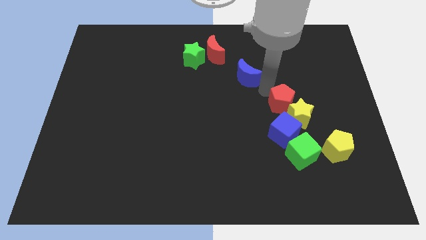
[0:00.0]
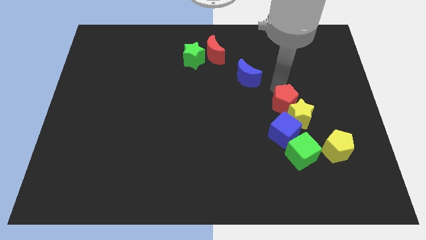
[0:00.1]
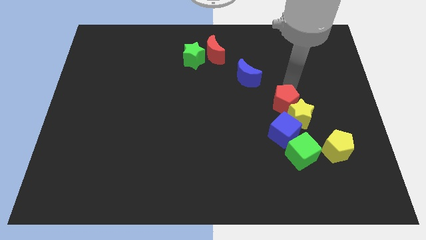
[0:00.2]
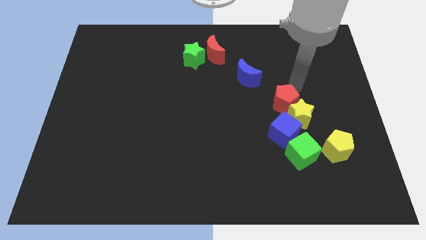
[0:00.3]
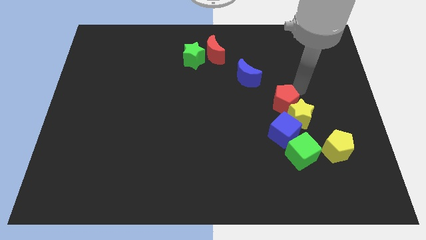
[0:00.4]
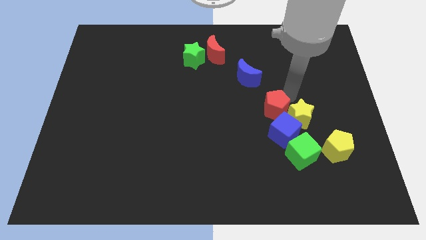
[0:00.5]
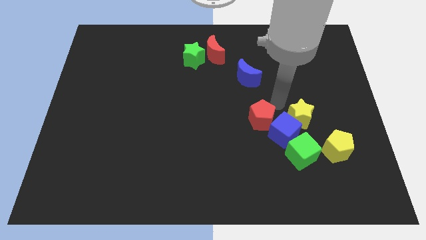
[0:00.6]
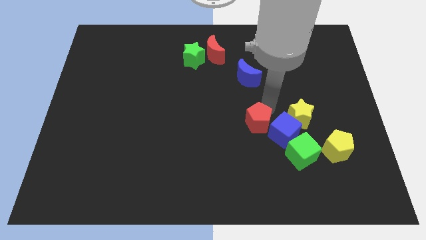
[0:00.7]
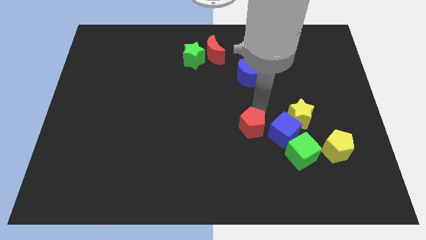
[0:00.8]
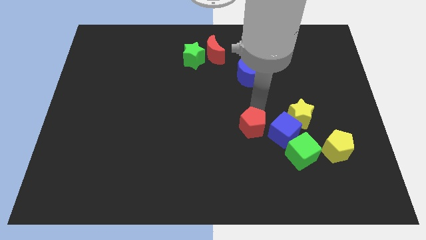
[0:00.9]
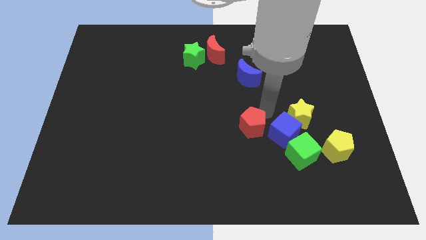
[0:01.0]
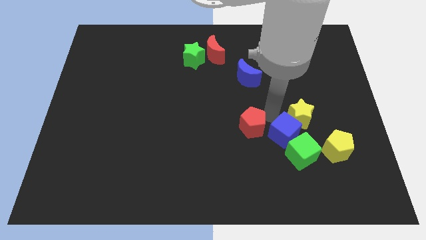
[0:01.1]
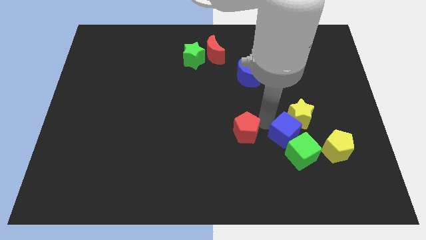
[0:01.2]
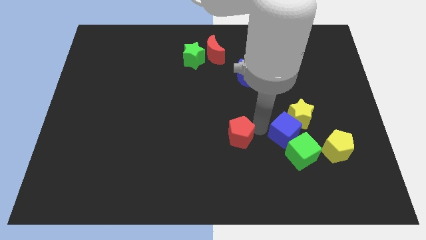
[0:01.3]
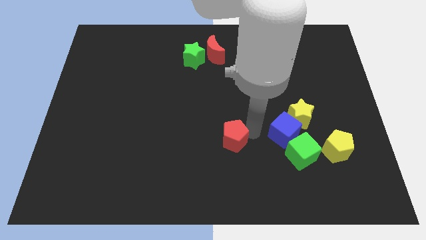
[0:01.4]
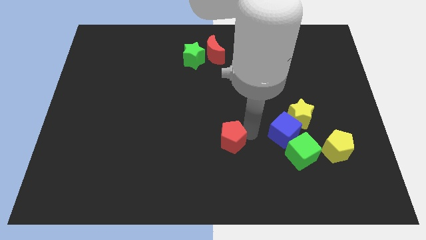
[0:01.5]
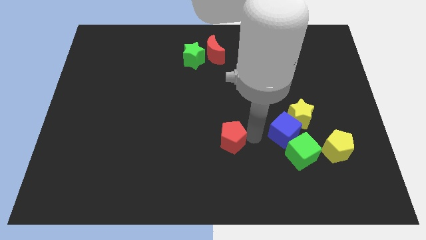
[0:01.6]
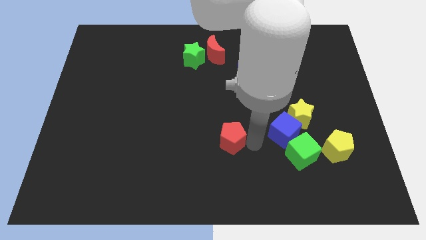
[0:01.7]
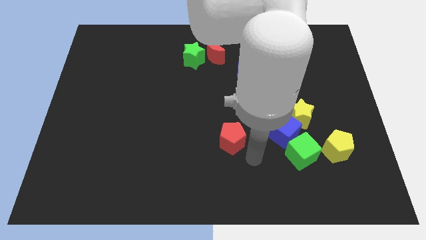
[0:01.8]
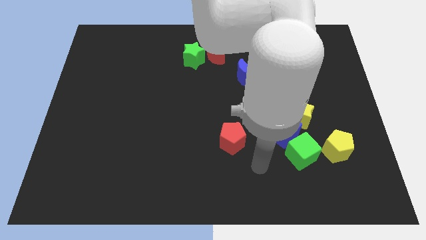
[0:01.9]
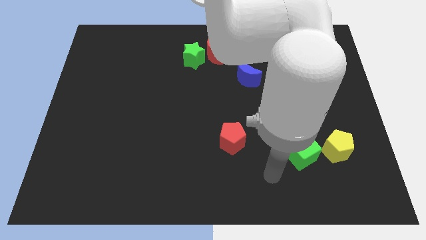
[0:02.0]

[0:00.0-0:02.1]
move red pentagon to the bottom center

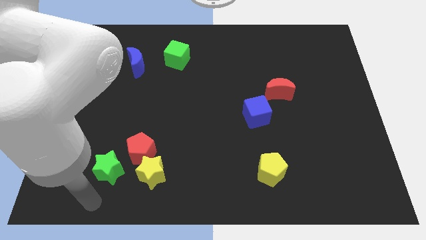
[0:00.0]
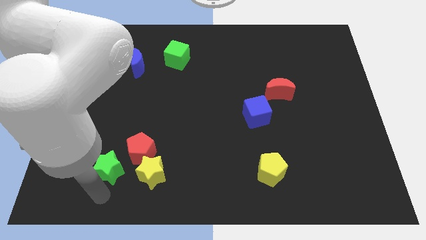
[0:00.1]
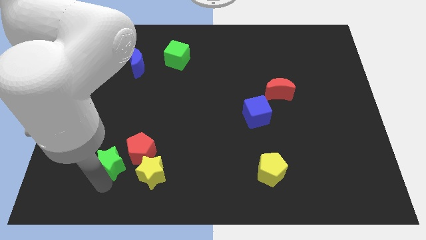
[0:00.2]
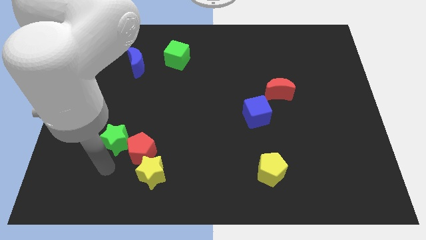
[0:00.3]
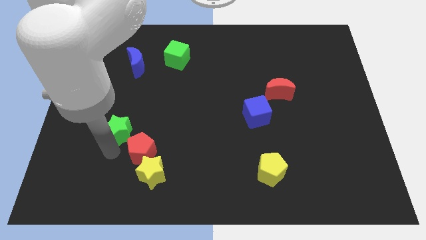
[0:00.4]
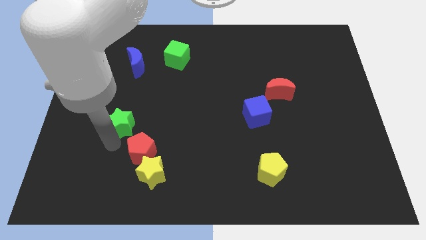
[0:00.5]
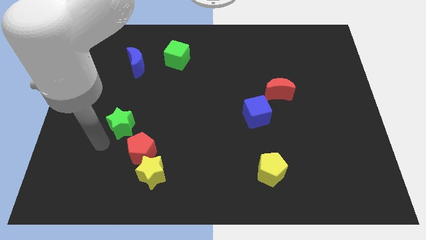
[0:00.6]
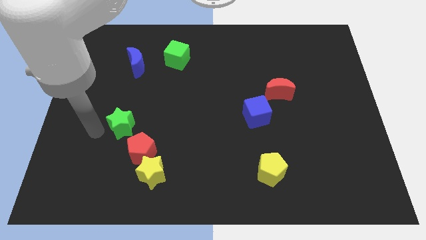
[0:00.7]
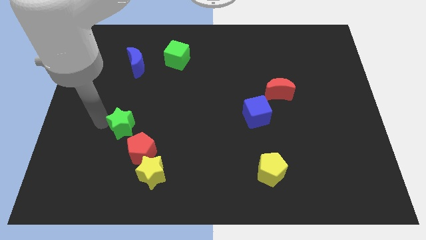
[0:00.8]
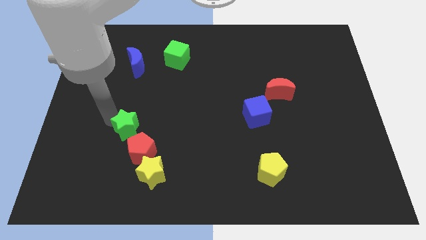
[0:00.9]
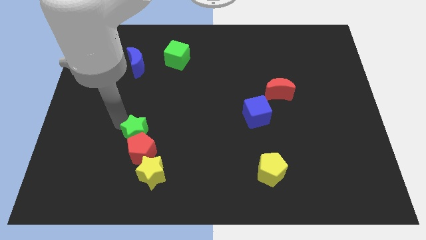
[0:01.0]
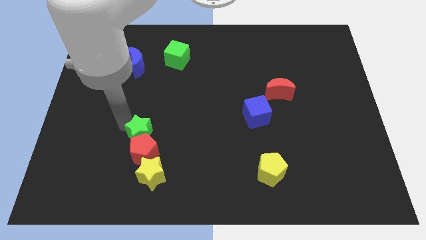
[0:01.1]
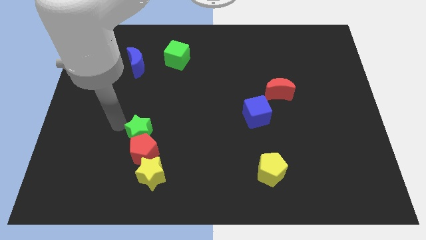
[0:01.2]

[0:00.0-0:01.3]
push green star to the top of the red pentagon

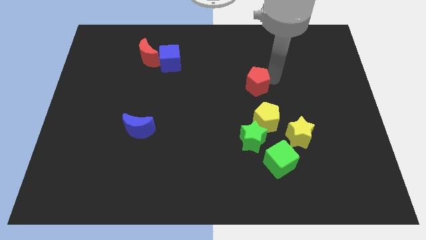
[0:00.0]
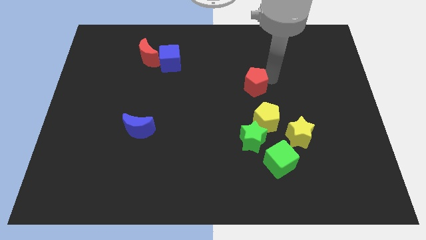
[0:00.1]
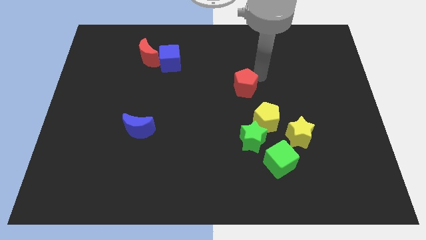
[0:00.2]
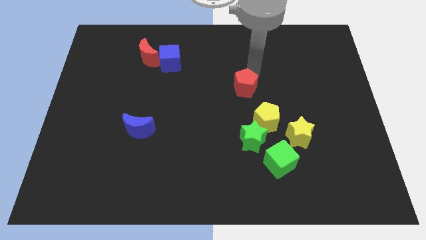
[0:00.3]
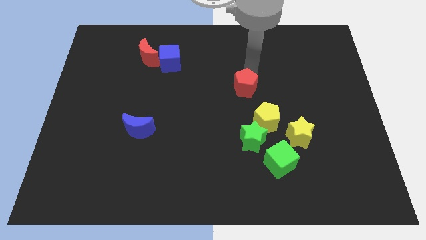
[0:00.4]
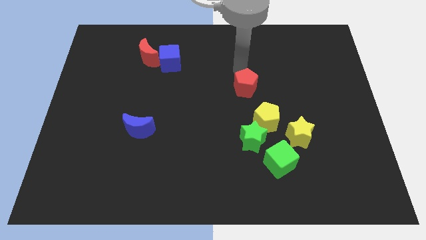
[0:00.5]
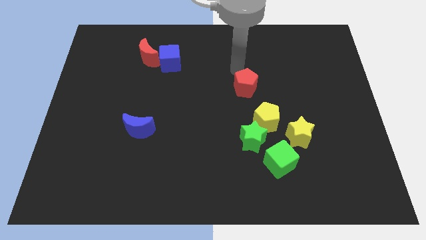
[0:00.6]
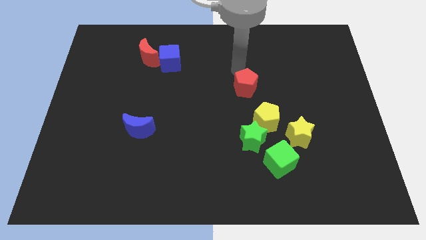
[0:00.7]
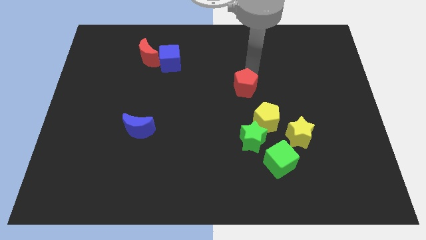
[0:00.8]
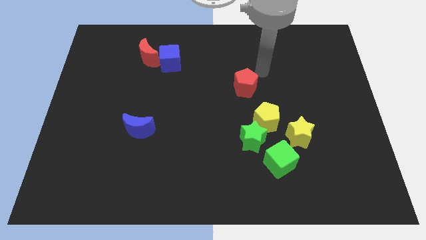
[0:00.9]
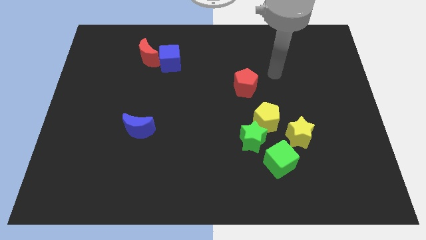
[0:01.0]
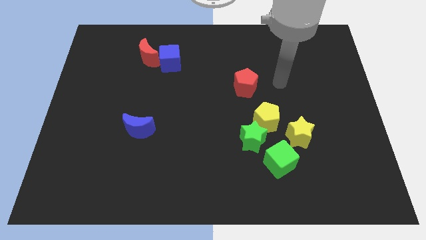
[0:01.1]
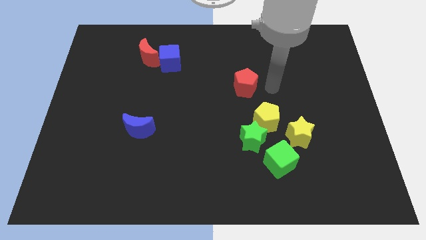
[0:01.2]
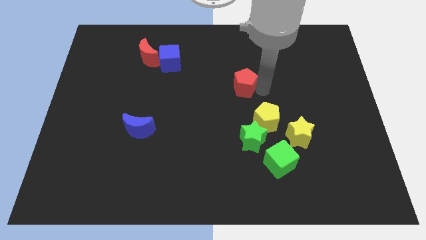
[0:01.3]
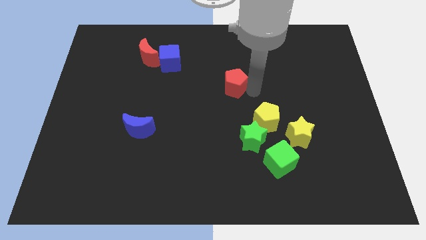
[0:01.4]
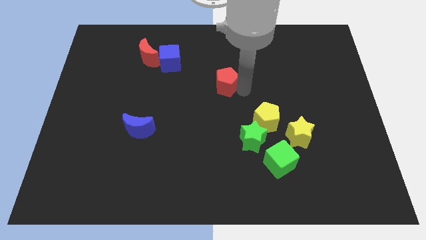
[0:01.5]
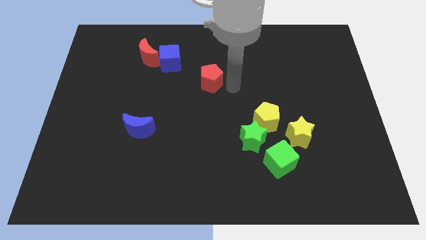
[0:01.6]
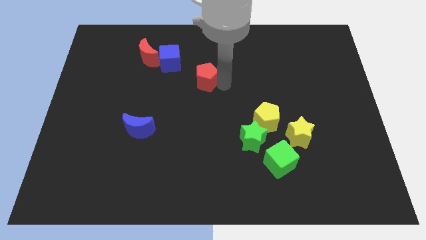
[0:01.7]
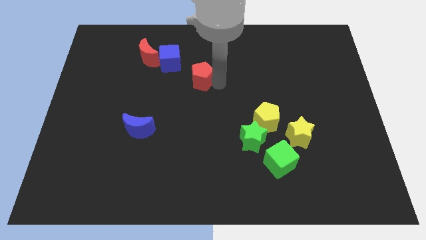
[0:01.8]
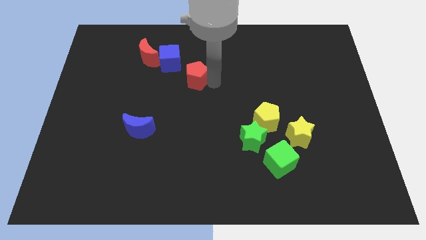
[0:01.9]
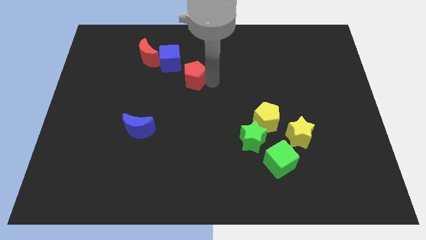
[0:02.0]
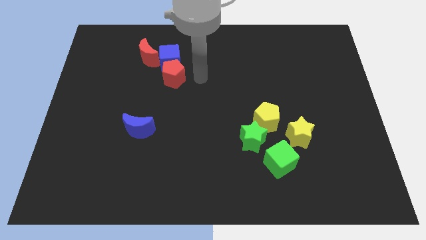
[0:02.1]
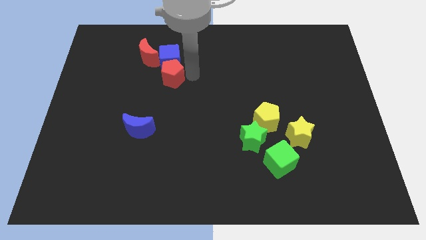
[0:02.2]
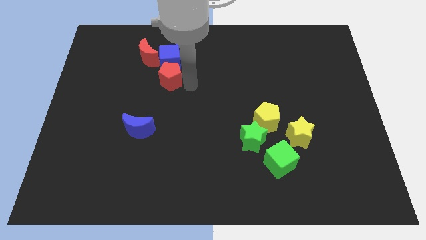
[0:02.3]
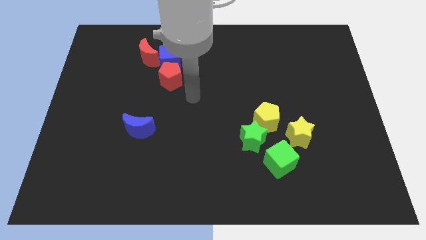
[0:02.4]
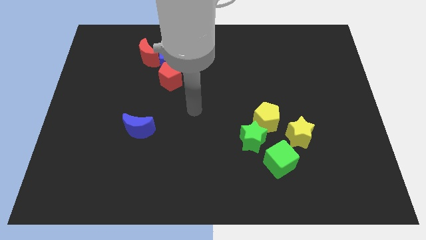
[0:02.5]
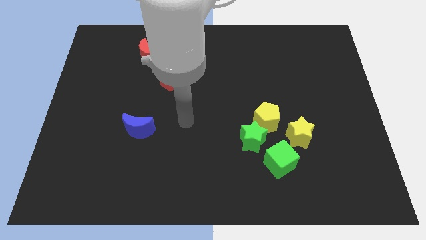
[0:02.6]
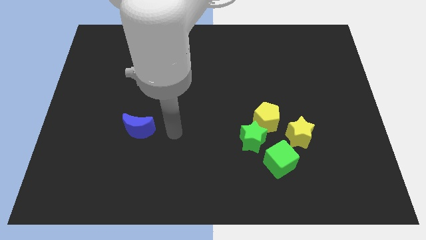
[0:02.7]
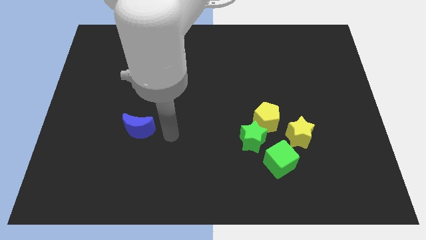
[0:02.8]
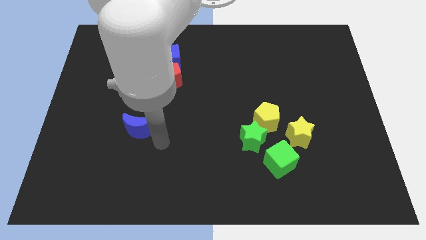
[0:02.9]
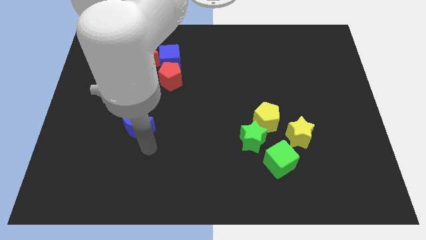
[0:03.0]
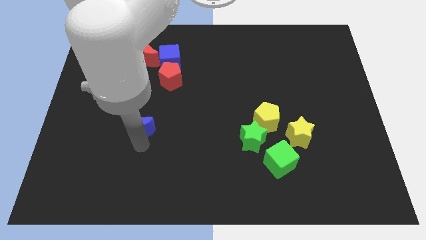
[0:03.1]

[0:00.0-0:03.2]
place the red pentagon vertically below the blue cube

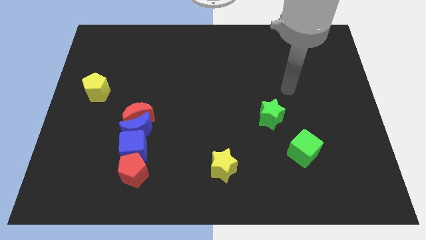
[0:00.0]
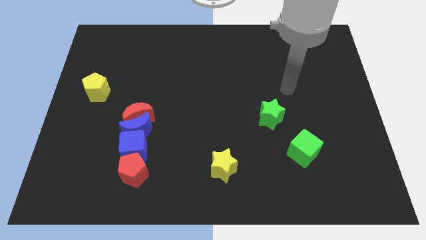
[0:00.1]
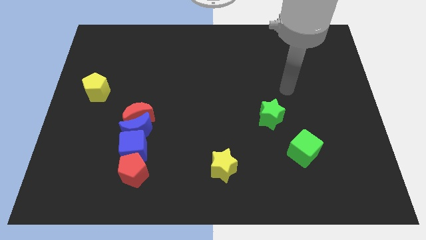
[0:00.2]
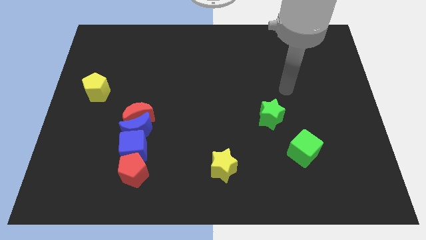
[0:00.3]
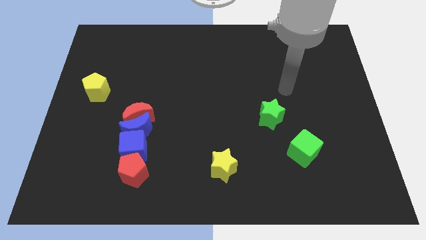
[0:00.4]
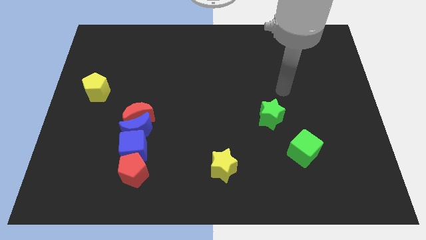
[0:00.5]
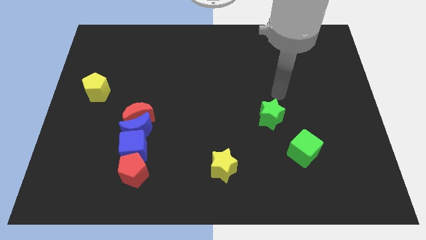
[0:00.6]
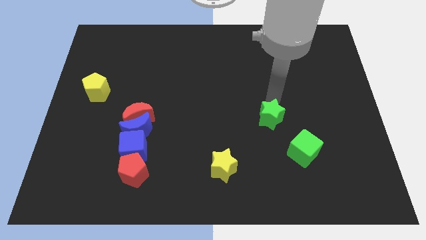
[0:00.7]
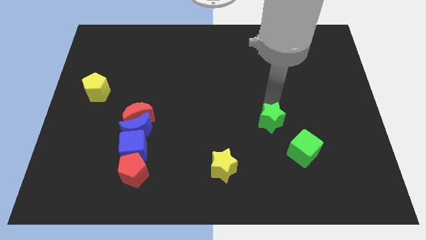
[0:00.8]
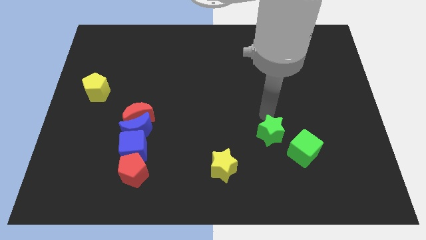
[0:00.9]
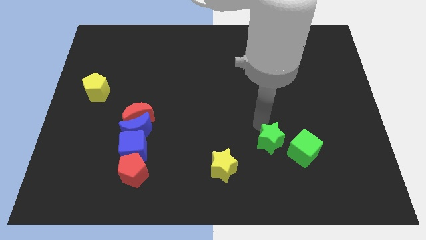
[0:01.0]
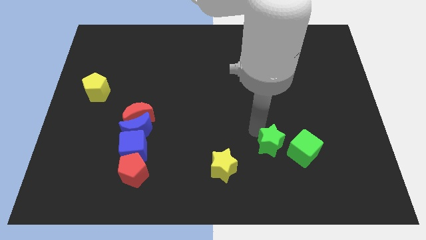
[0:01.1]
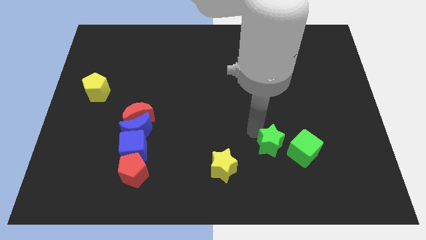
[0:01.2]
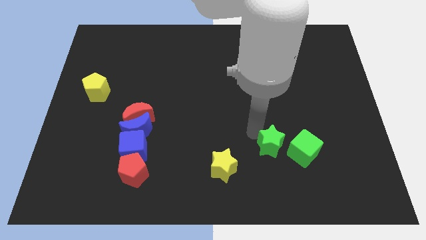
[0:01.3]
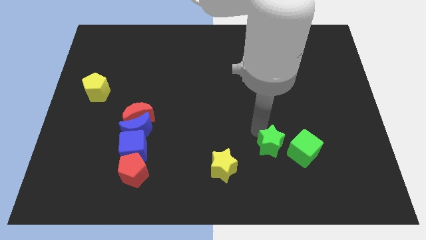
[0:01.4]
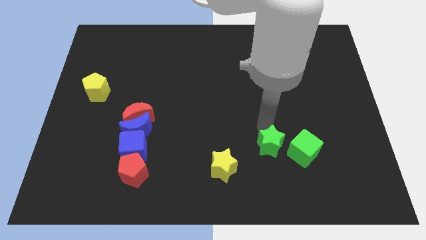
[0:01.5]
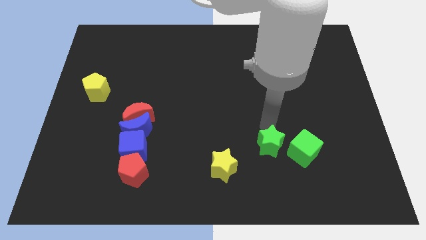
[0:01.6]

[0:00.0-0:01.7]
place the green star beside the green cube

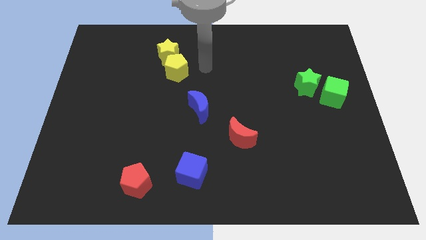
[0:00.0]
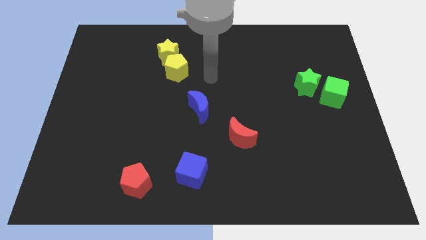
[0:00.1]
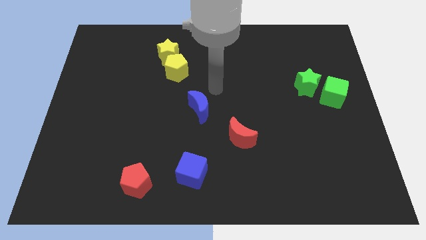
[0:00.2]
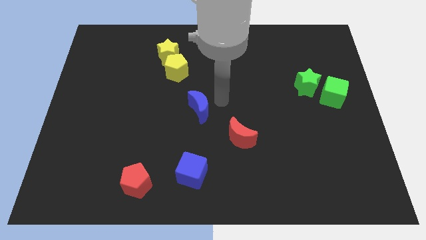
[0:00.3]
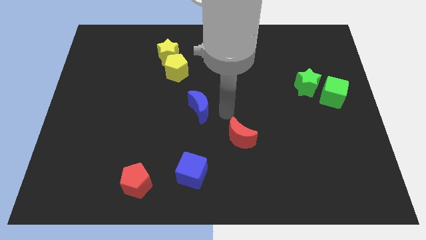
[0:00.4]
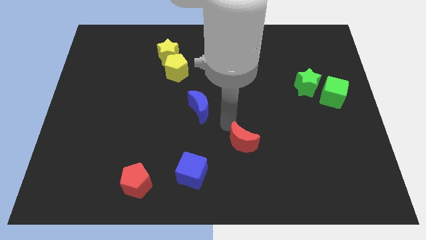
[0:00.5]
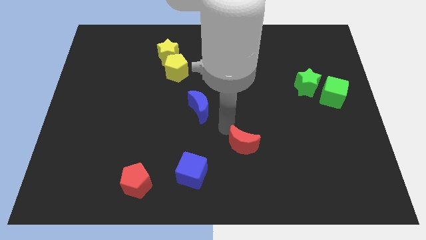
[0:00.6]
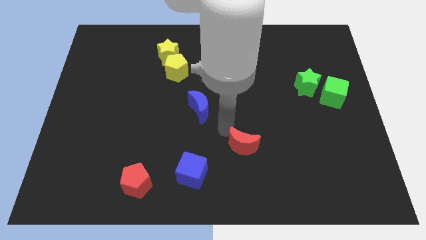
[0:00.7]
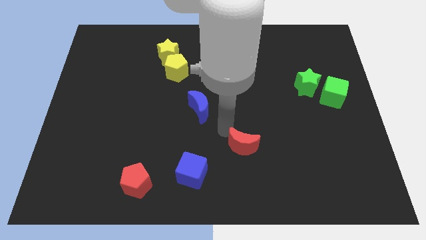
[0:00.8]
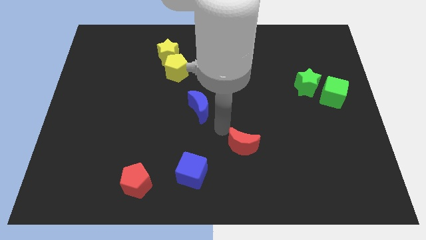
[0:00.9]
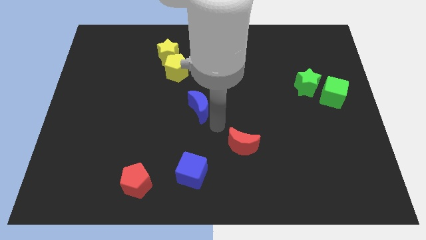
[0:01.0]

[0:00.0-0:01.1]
slide the red crescent diagonally on the top right side of the blue cube
